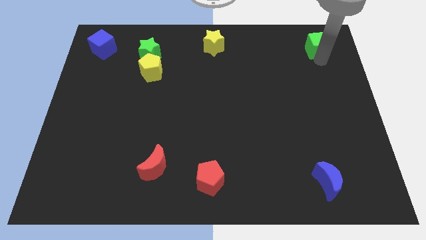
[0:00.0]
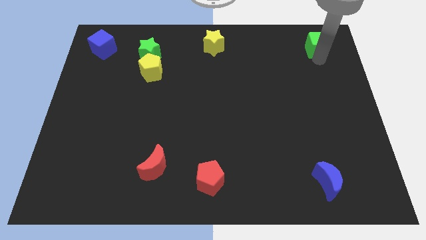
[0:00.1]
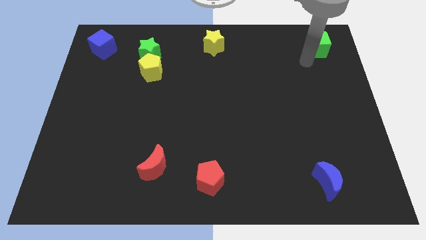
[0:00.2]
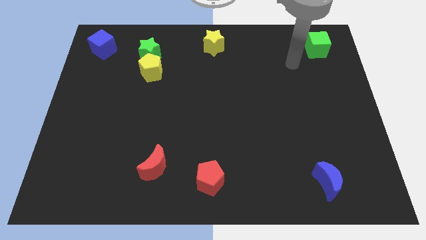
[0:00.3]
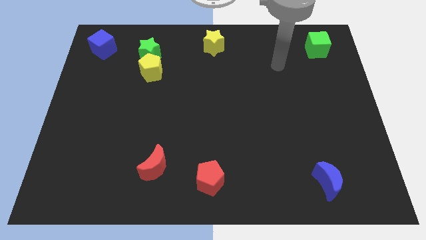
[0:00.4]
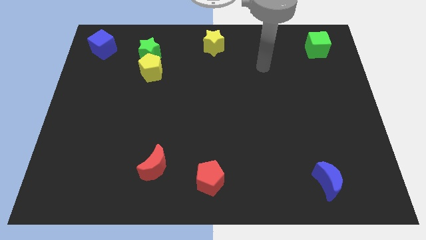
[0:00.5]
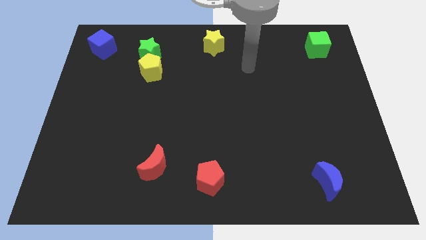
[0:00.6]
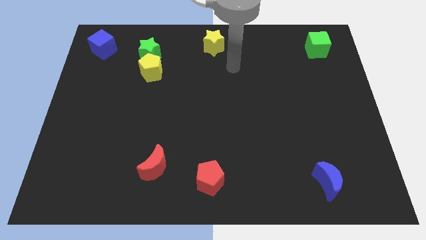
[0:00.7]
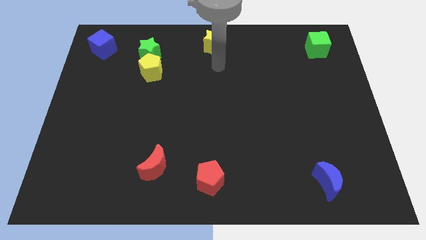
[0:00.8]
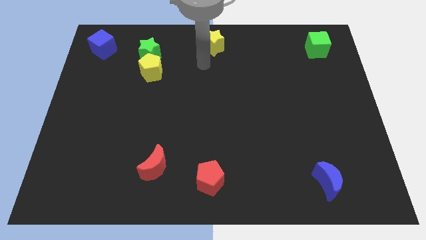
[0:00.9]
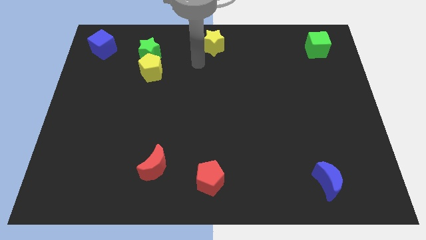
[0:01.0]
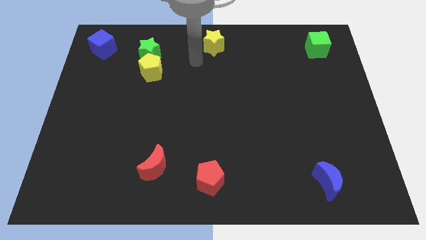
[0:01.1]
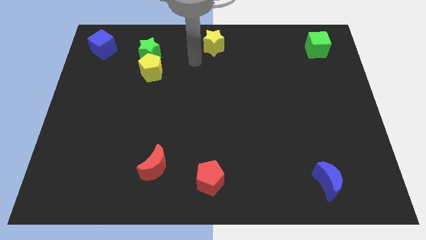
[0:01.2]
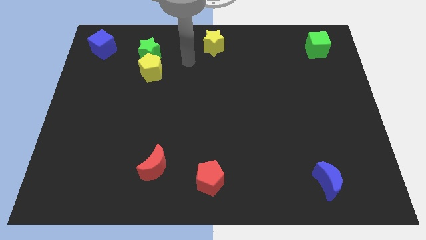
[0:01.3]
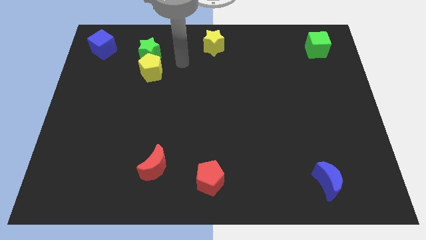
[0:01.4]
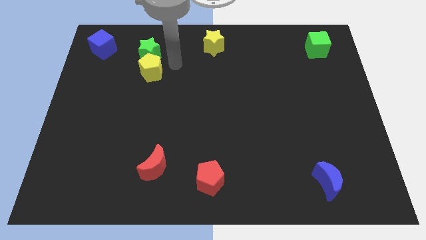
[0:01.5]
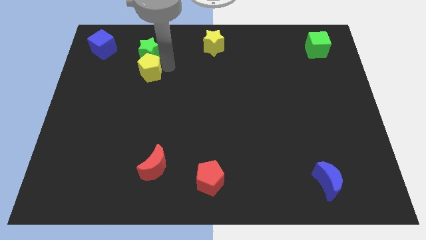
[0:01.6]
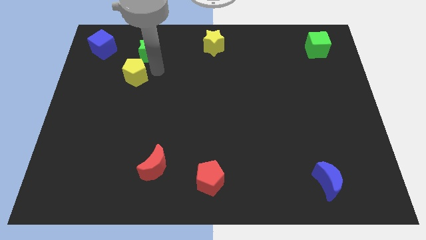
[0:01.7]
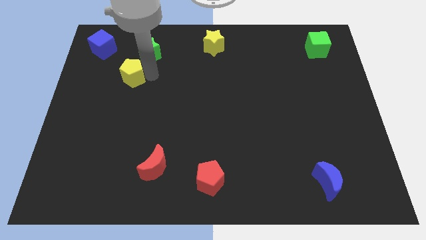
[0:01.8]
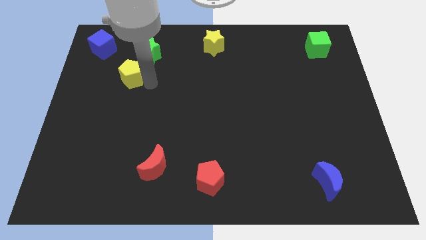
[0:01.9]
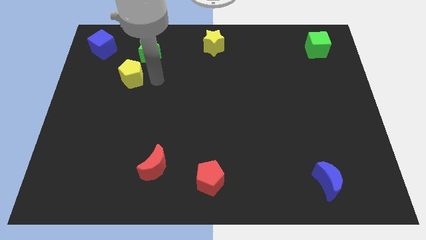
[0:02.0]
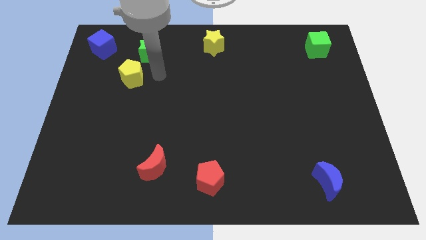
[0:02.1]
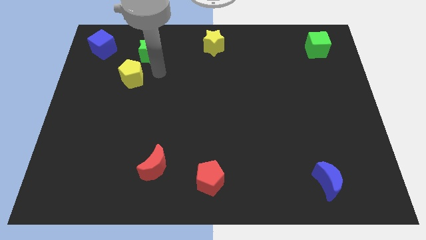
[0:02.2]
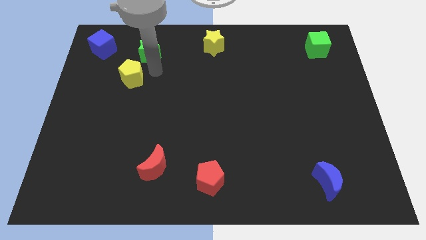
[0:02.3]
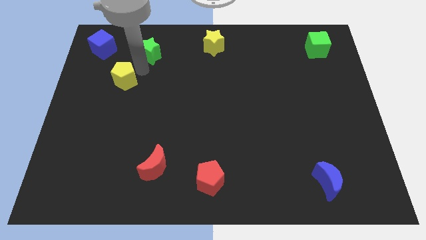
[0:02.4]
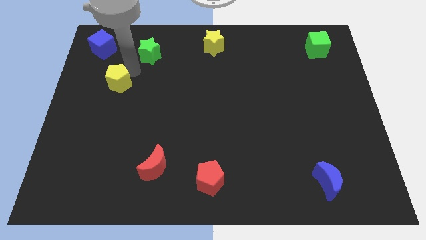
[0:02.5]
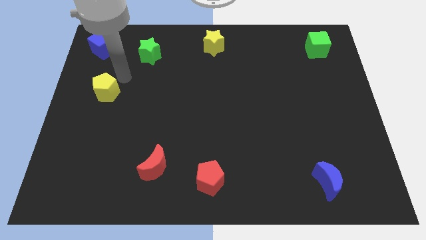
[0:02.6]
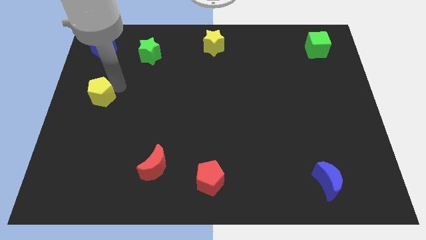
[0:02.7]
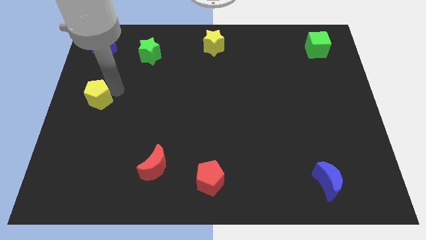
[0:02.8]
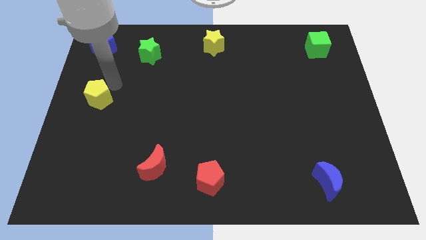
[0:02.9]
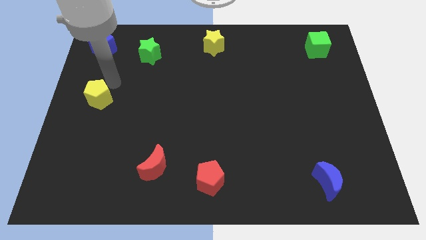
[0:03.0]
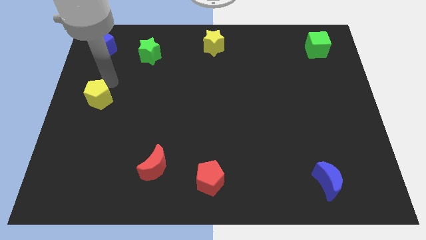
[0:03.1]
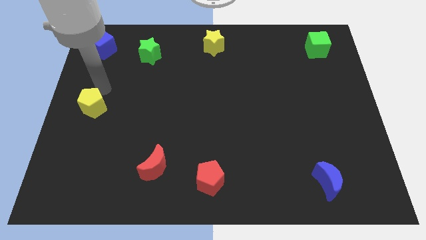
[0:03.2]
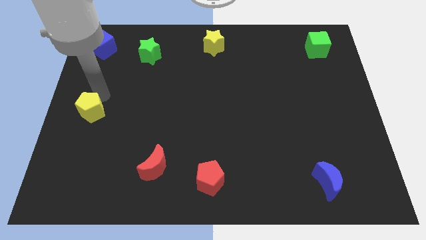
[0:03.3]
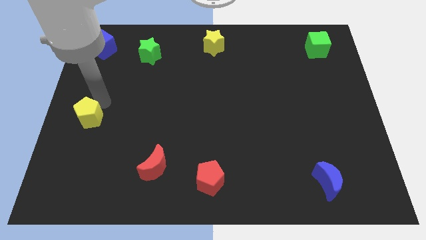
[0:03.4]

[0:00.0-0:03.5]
move the yellow pentagon towards the left center of the board

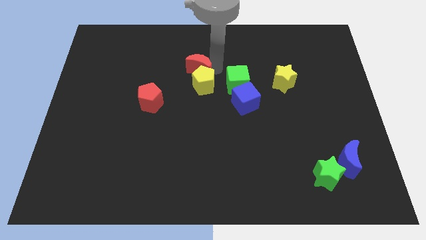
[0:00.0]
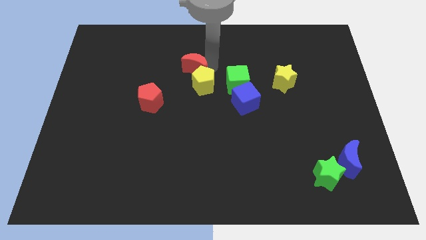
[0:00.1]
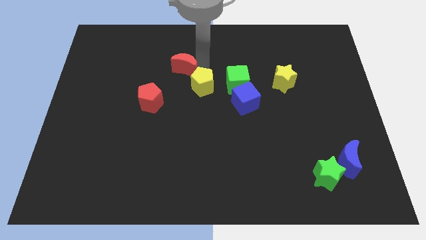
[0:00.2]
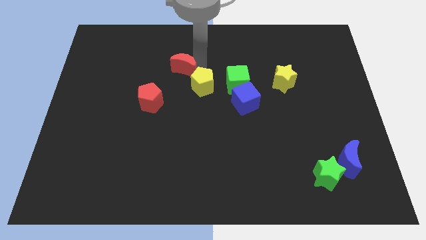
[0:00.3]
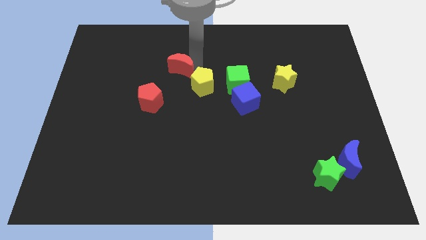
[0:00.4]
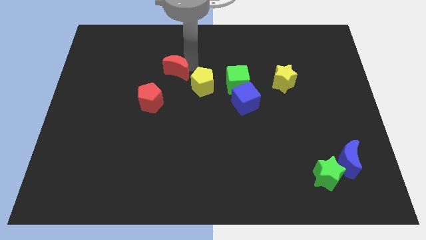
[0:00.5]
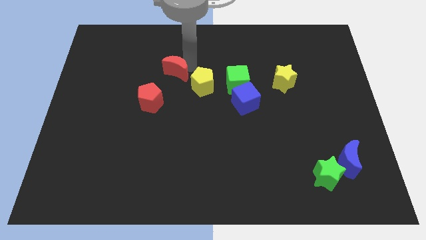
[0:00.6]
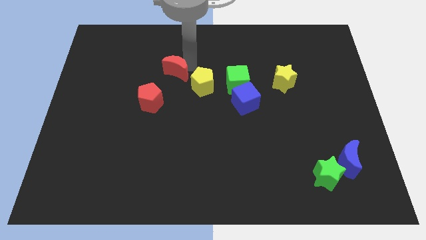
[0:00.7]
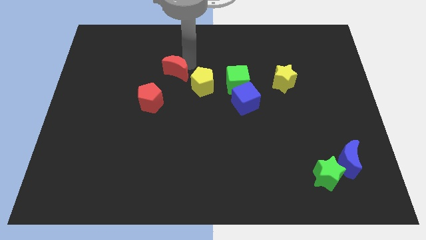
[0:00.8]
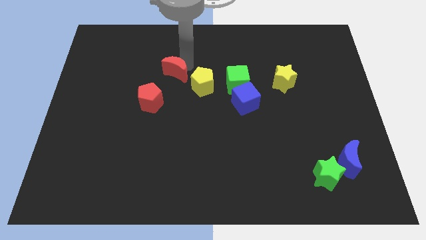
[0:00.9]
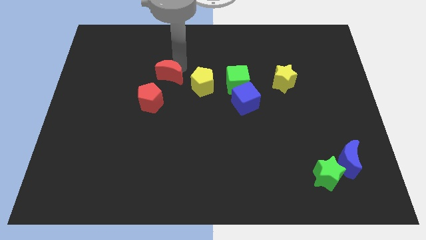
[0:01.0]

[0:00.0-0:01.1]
separate the red crescent from the yellow pentagon

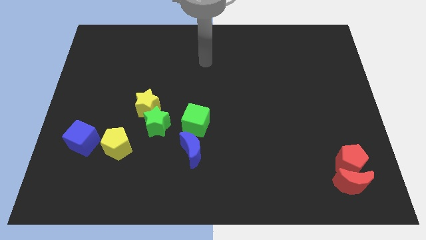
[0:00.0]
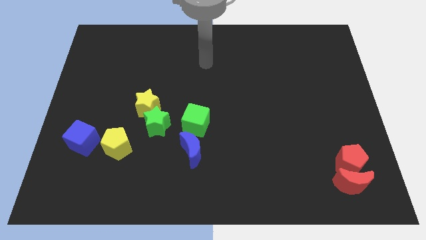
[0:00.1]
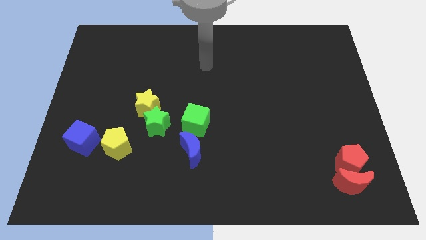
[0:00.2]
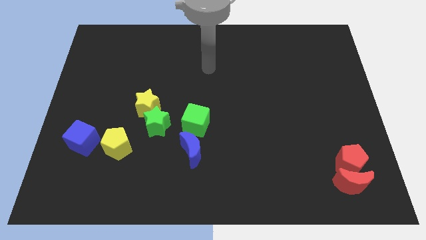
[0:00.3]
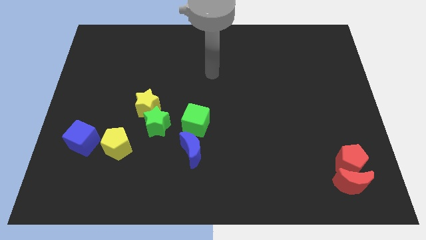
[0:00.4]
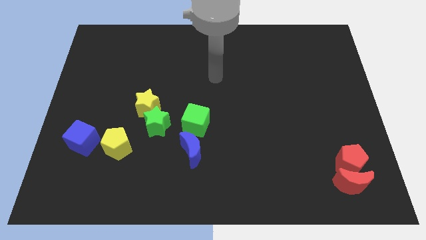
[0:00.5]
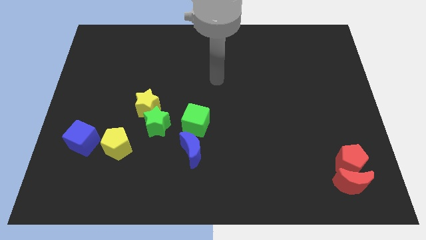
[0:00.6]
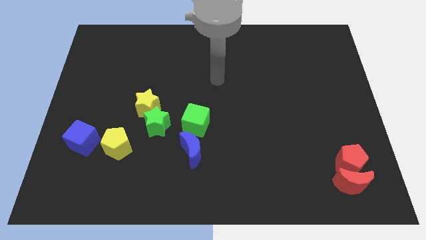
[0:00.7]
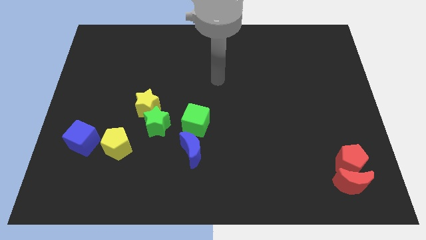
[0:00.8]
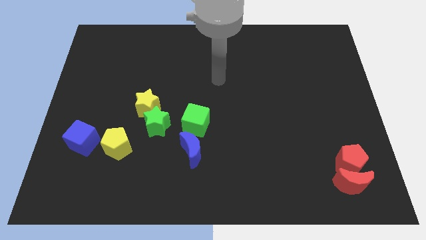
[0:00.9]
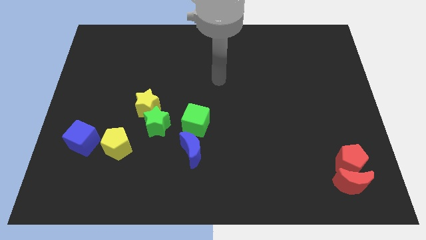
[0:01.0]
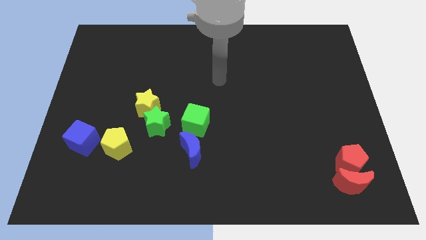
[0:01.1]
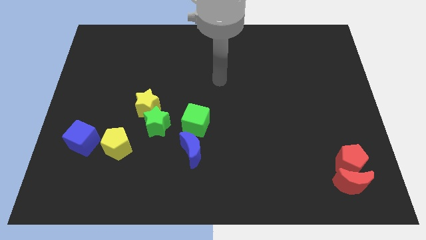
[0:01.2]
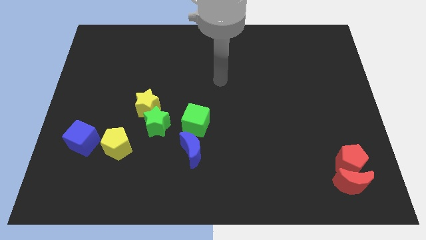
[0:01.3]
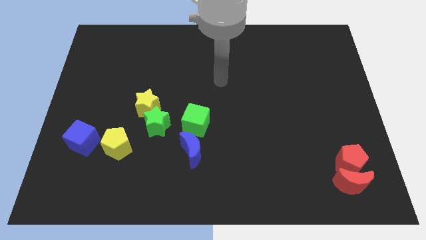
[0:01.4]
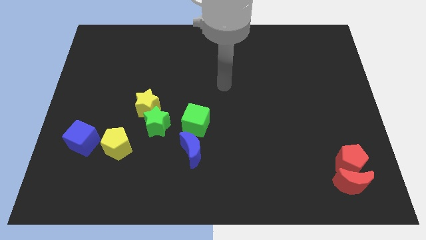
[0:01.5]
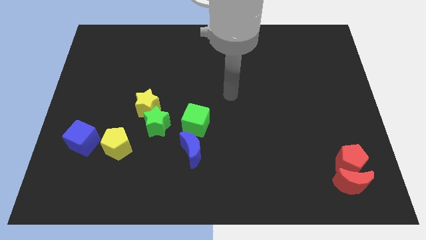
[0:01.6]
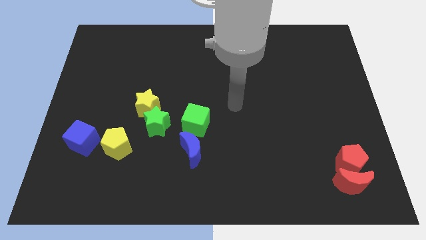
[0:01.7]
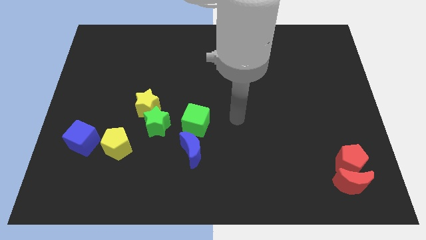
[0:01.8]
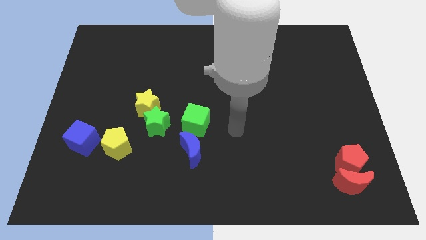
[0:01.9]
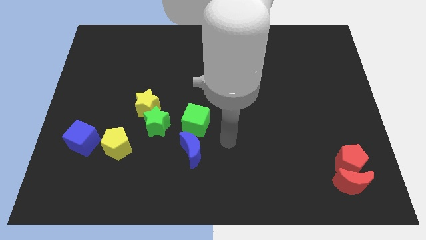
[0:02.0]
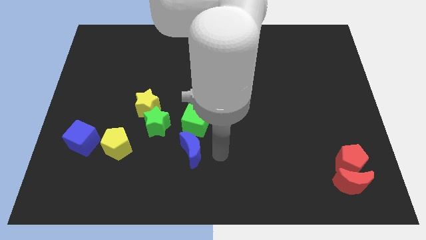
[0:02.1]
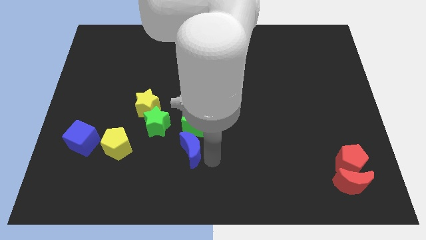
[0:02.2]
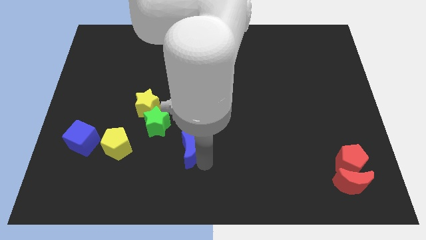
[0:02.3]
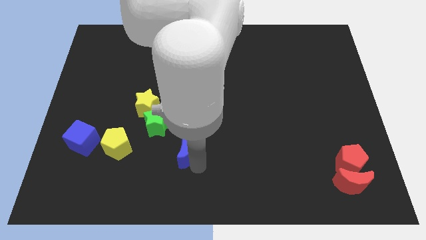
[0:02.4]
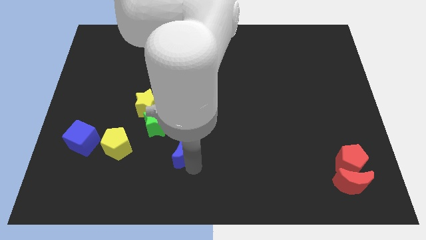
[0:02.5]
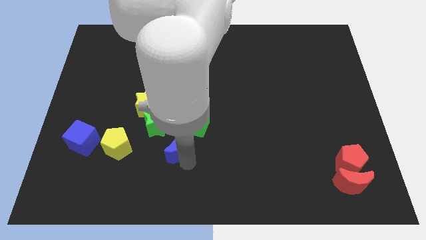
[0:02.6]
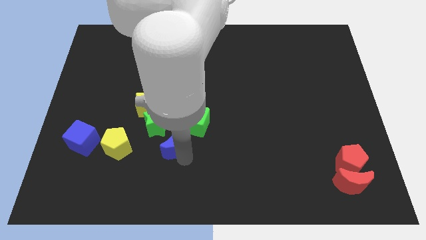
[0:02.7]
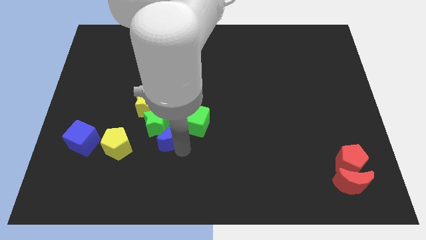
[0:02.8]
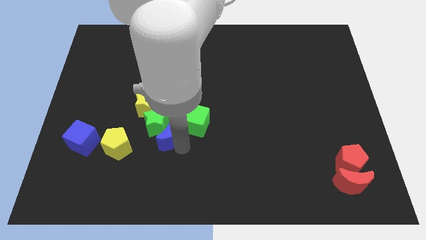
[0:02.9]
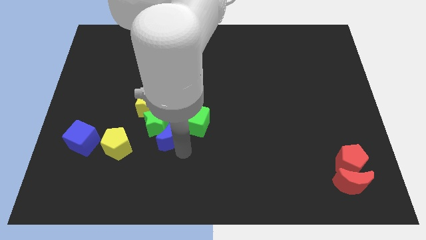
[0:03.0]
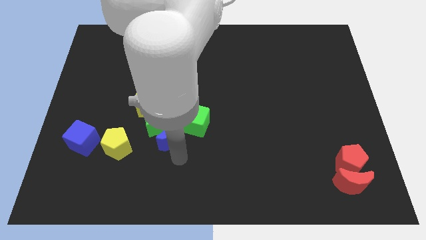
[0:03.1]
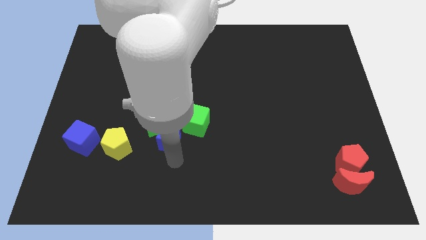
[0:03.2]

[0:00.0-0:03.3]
push the blue crescent towards green star

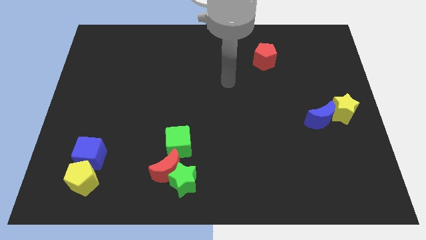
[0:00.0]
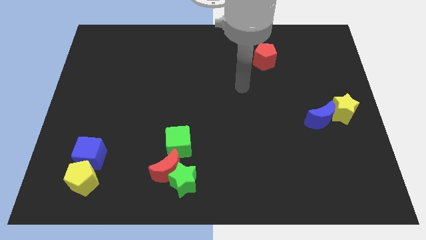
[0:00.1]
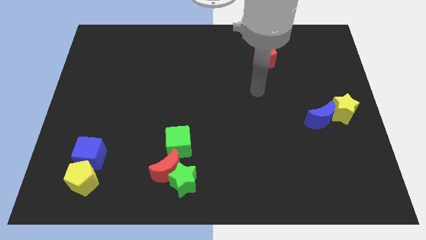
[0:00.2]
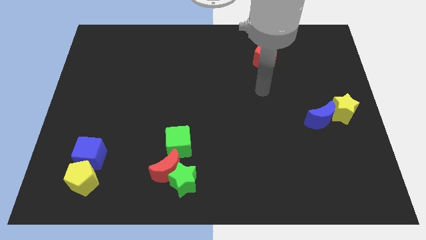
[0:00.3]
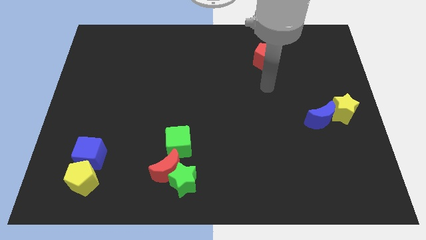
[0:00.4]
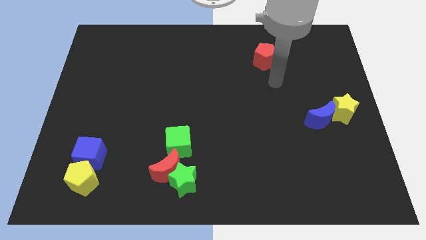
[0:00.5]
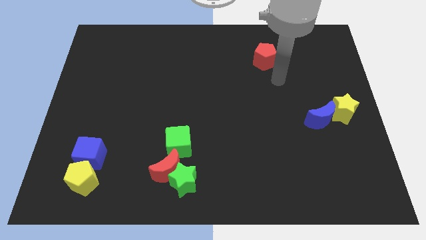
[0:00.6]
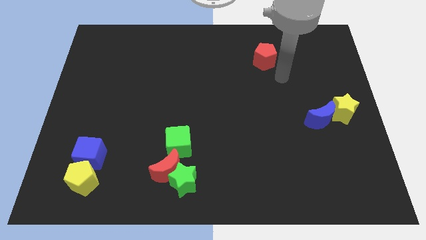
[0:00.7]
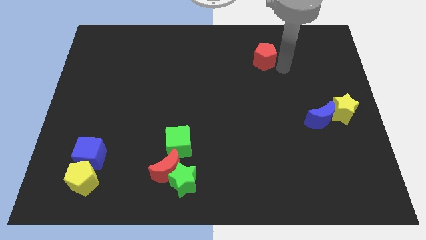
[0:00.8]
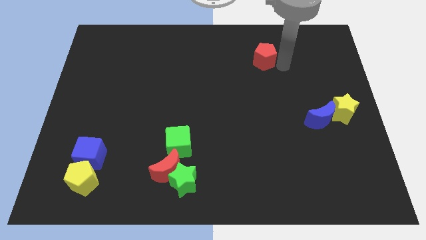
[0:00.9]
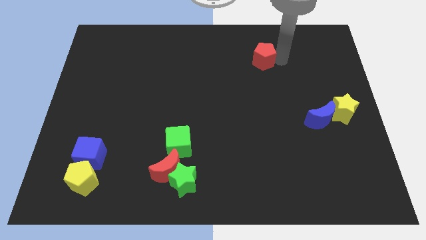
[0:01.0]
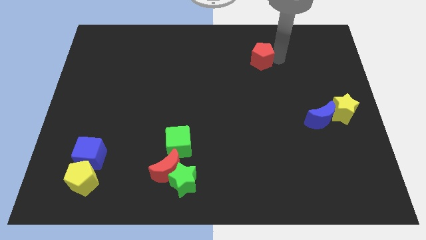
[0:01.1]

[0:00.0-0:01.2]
place arm right to red pentagon
